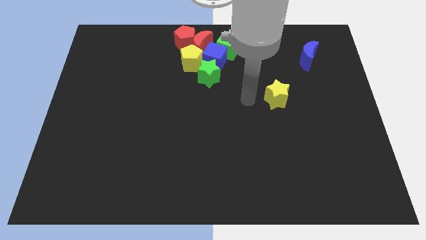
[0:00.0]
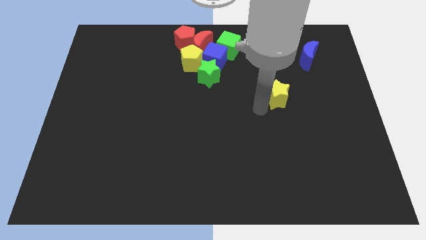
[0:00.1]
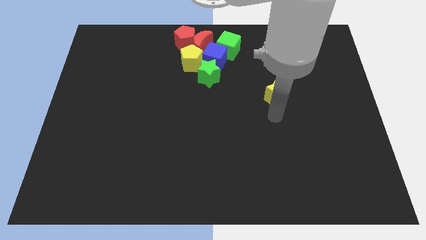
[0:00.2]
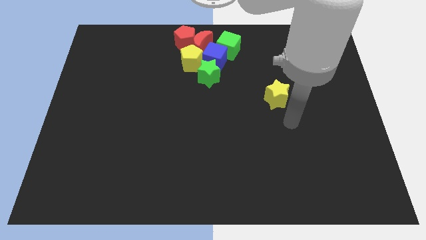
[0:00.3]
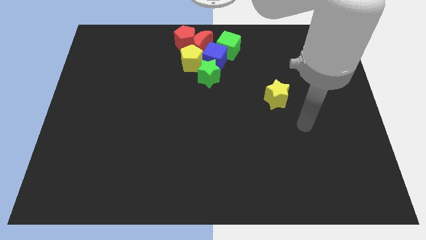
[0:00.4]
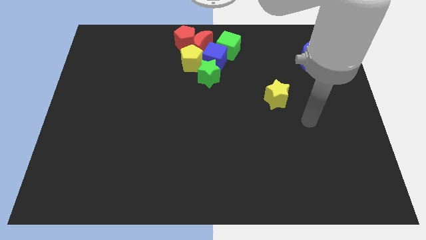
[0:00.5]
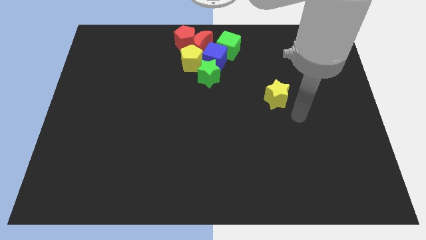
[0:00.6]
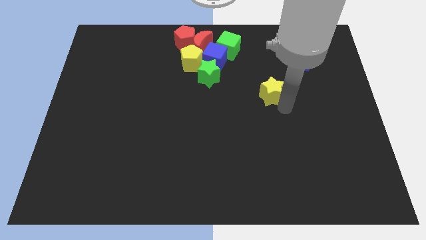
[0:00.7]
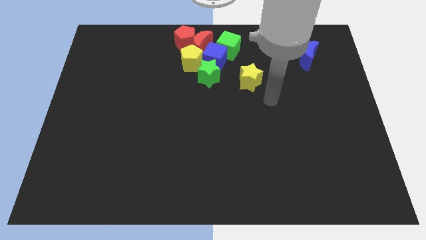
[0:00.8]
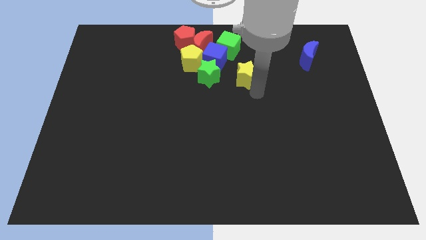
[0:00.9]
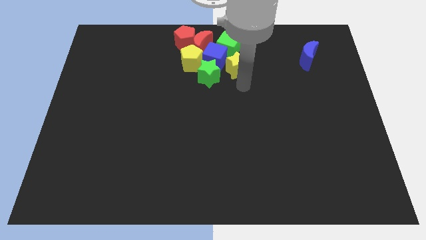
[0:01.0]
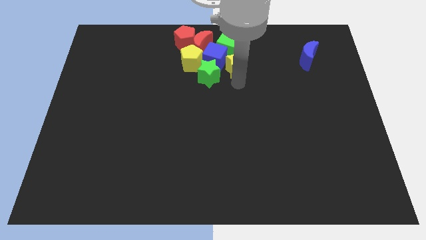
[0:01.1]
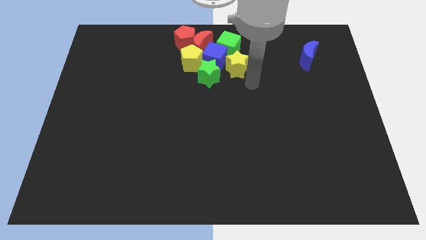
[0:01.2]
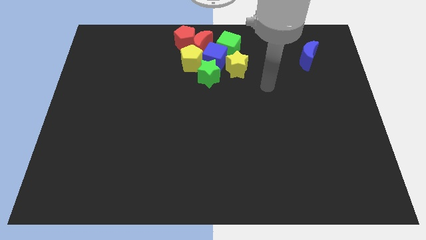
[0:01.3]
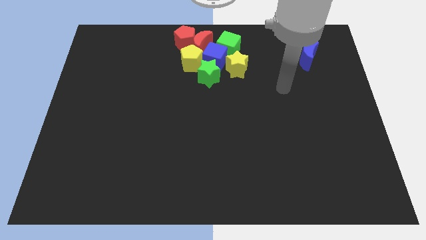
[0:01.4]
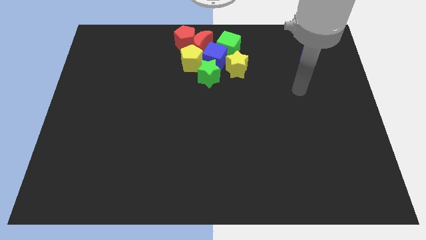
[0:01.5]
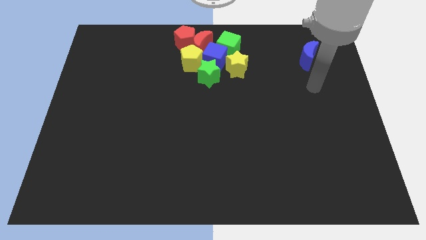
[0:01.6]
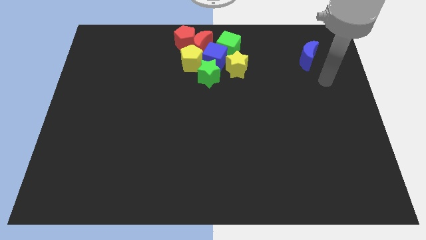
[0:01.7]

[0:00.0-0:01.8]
move the yellow star into the group of blocks

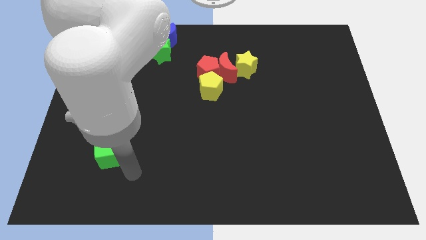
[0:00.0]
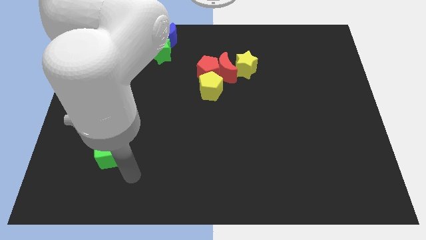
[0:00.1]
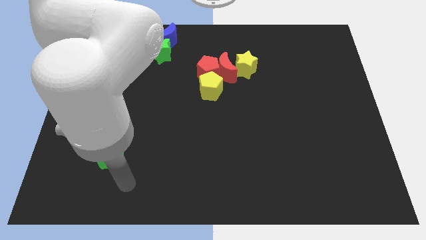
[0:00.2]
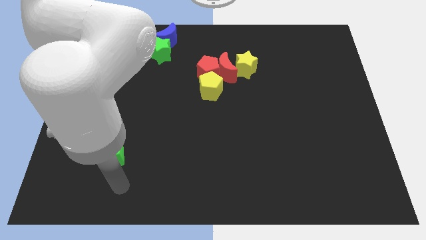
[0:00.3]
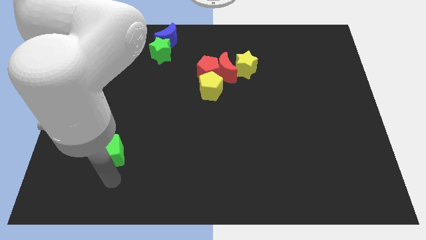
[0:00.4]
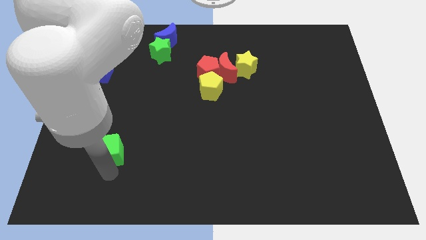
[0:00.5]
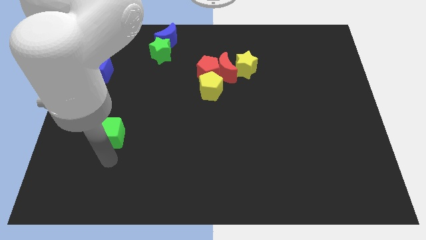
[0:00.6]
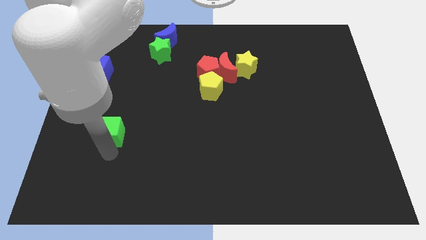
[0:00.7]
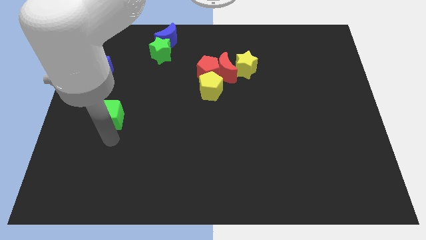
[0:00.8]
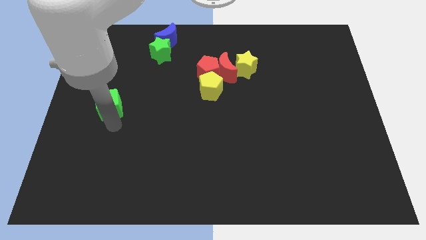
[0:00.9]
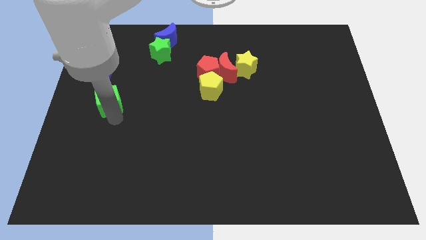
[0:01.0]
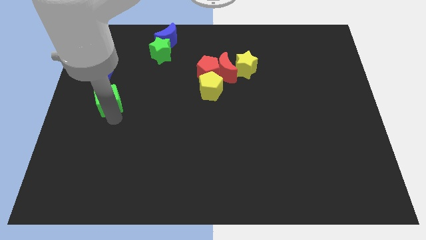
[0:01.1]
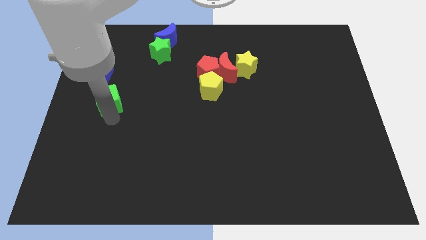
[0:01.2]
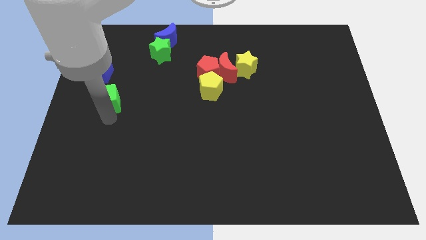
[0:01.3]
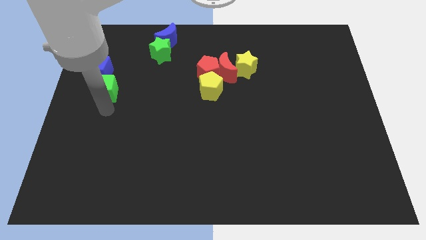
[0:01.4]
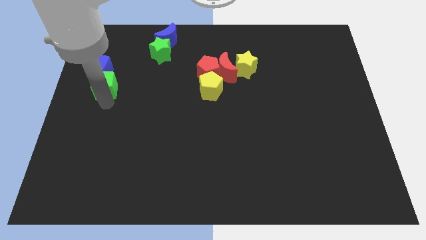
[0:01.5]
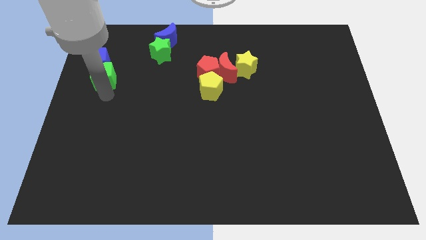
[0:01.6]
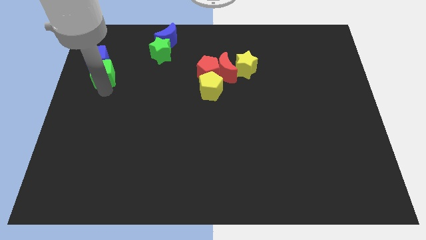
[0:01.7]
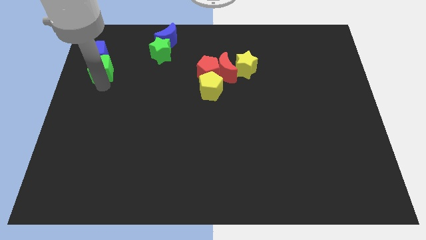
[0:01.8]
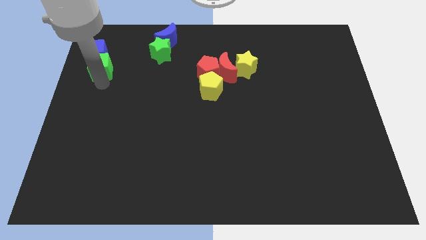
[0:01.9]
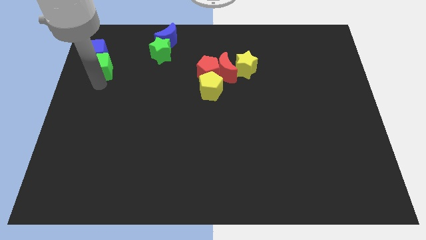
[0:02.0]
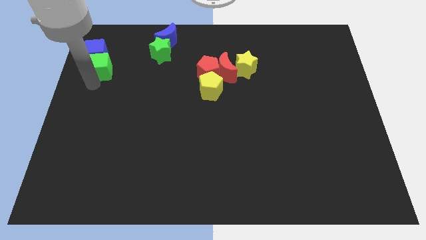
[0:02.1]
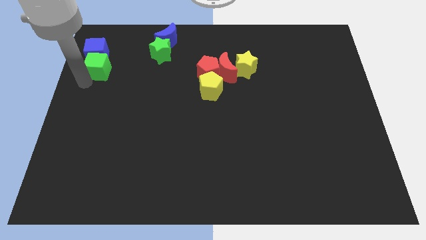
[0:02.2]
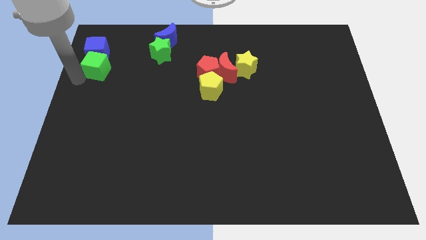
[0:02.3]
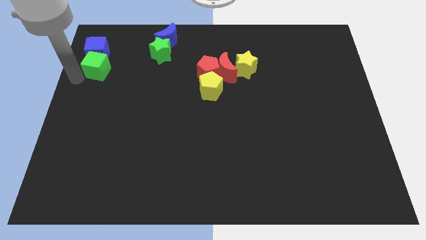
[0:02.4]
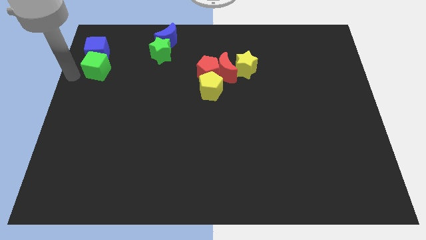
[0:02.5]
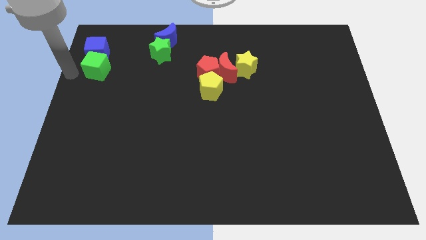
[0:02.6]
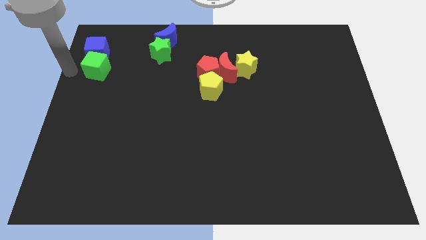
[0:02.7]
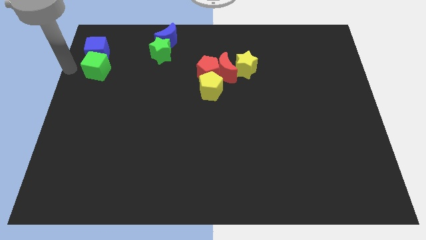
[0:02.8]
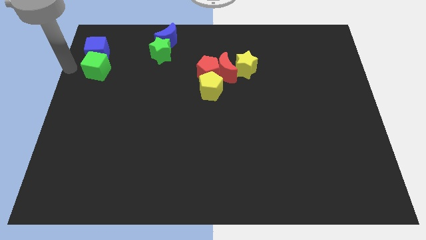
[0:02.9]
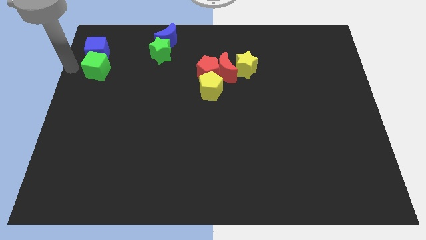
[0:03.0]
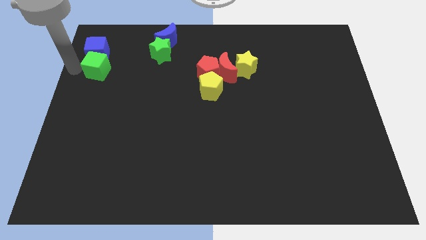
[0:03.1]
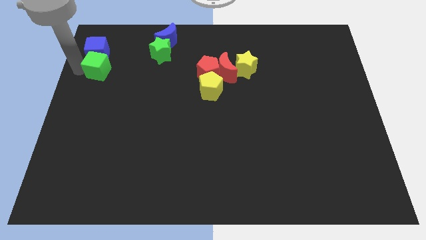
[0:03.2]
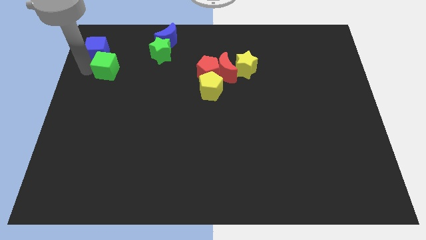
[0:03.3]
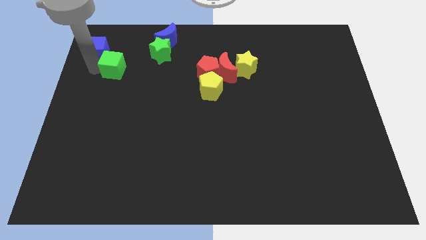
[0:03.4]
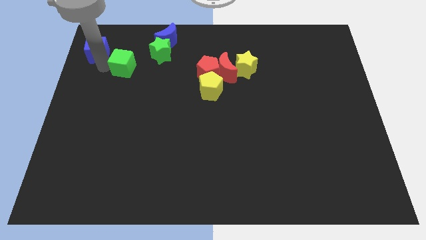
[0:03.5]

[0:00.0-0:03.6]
push the green cube into the blue cube

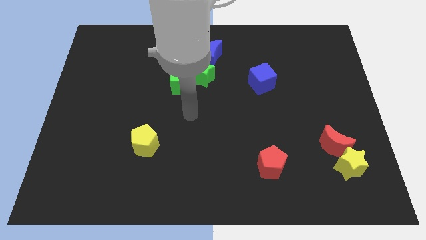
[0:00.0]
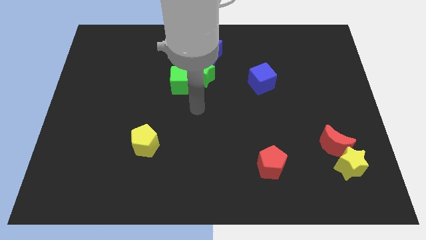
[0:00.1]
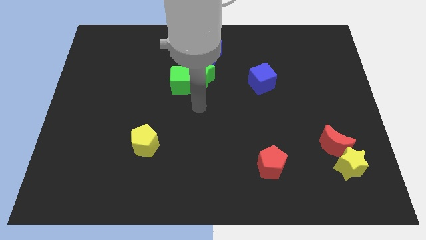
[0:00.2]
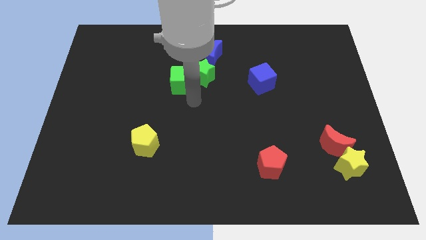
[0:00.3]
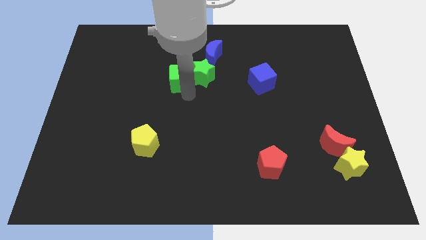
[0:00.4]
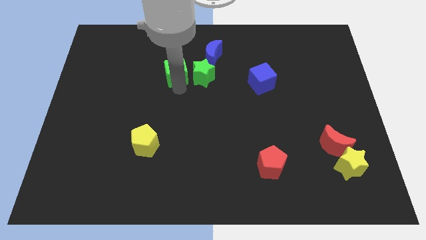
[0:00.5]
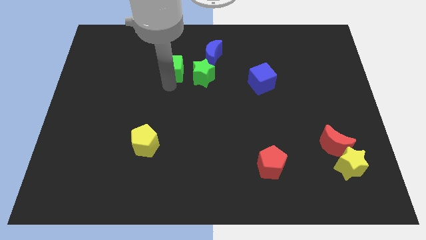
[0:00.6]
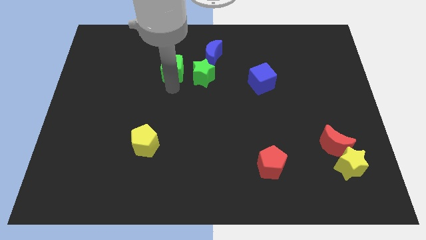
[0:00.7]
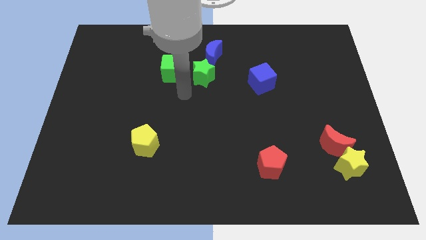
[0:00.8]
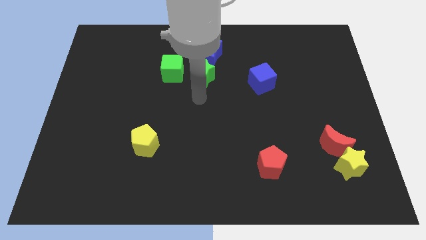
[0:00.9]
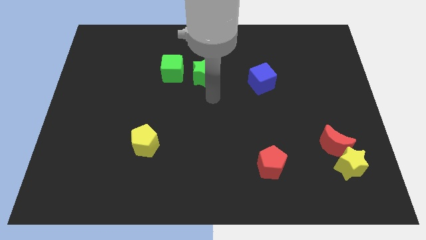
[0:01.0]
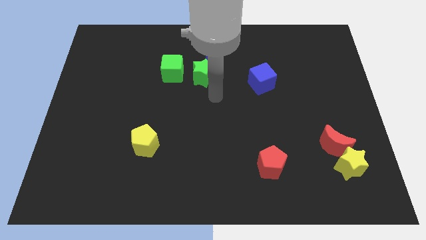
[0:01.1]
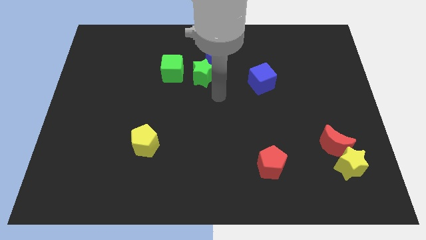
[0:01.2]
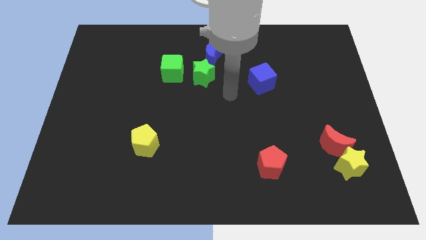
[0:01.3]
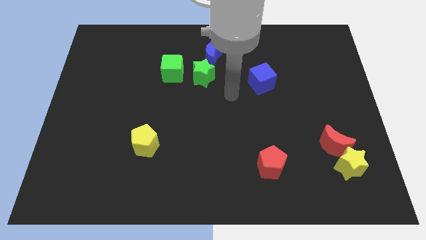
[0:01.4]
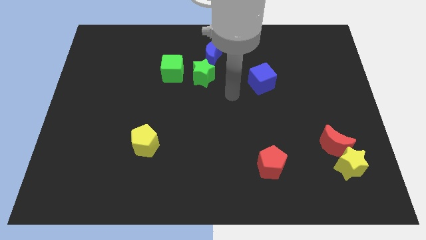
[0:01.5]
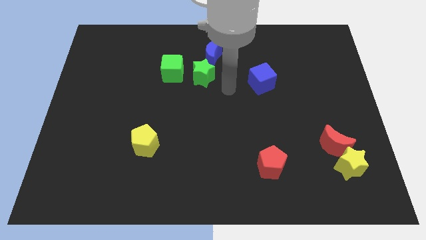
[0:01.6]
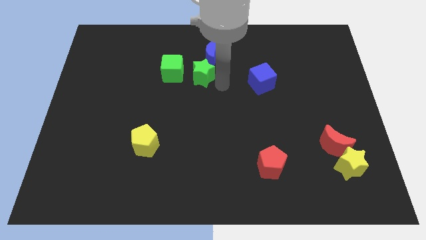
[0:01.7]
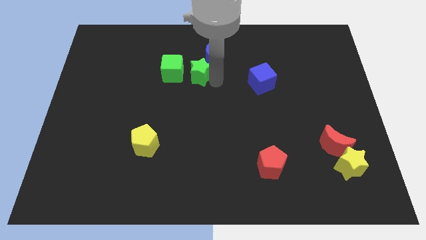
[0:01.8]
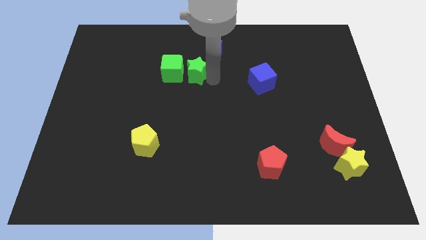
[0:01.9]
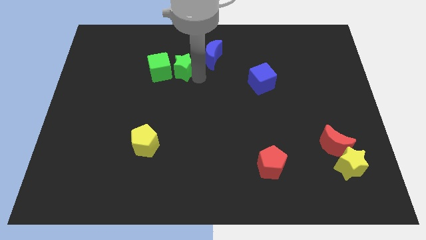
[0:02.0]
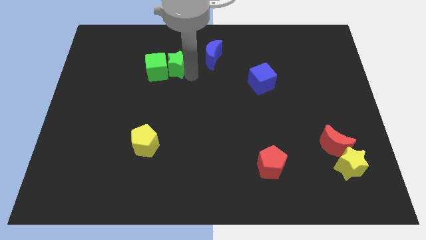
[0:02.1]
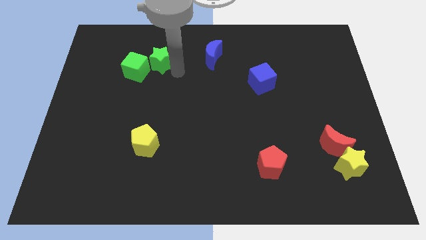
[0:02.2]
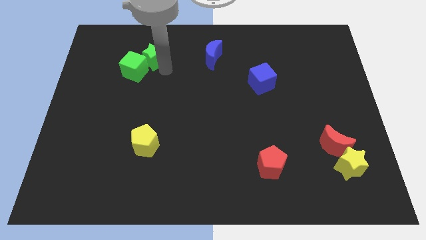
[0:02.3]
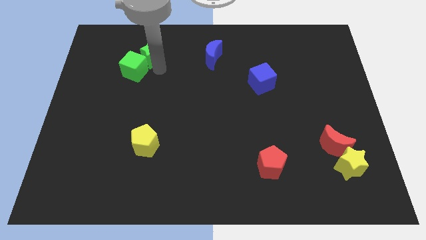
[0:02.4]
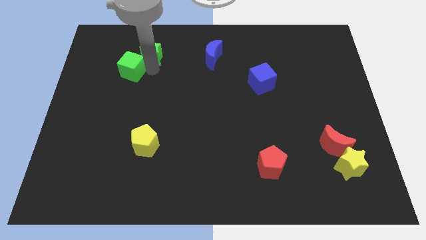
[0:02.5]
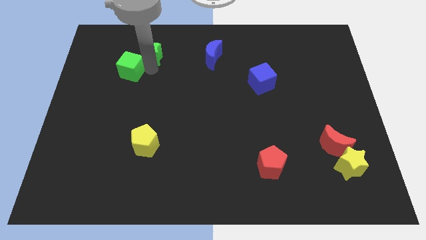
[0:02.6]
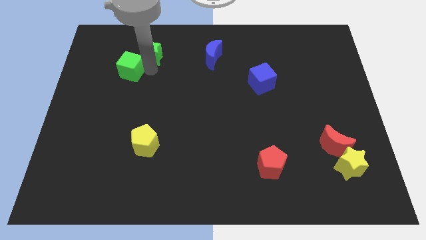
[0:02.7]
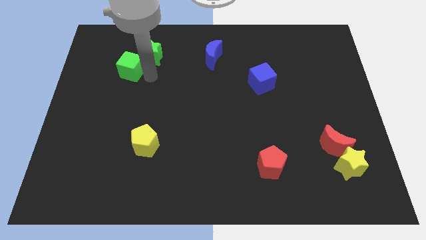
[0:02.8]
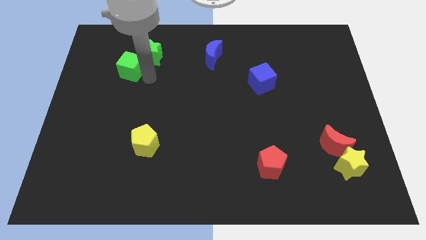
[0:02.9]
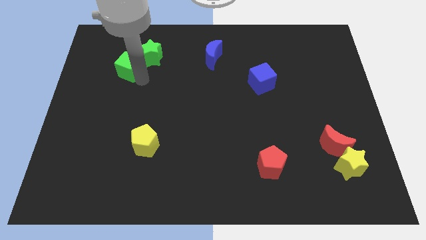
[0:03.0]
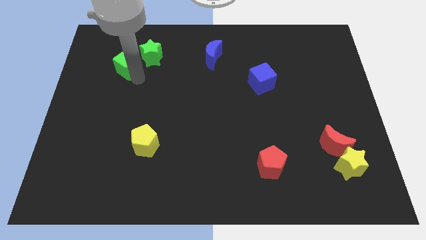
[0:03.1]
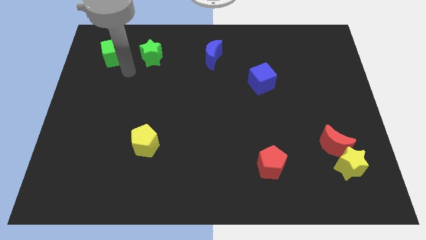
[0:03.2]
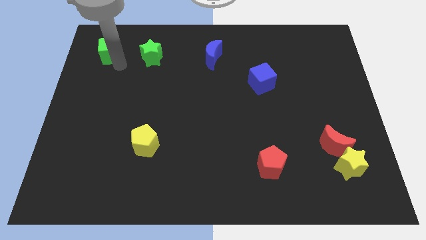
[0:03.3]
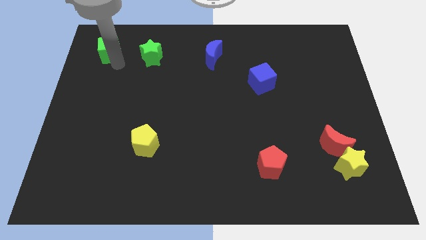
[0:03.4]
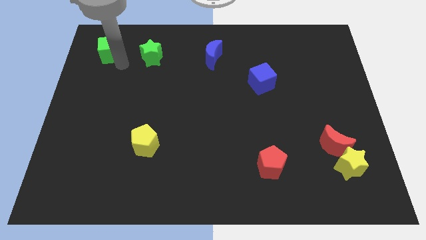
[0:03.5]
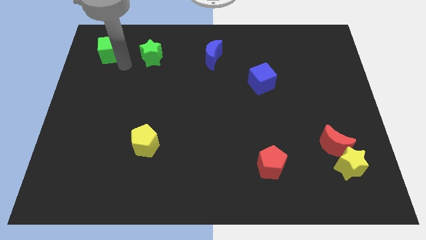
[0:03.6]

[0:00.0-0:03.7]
arrange both the green blocks to the left side of the blue crescent
